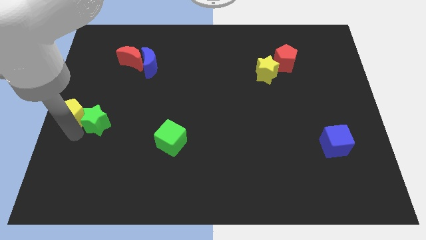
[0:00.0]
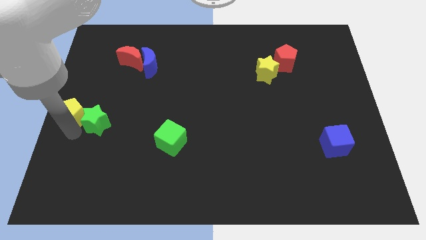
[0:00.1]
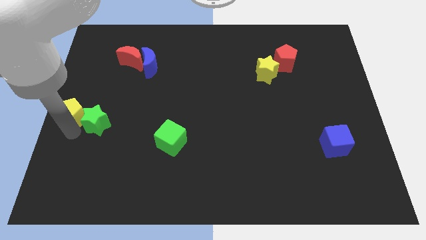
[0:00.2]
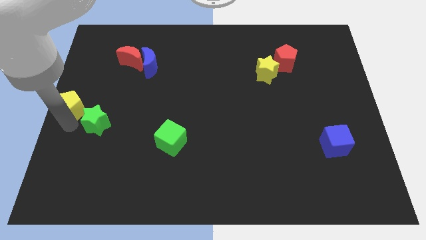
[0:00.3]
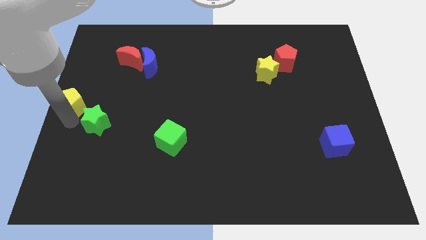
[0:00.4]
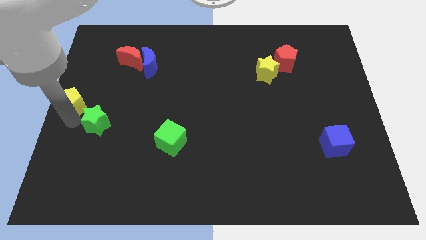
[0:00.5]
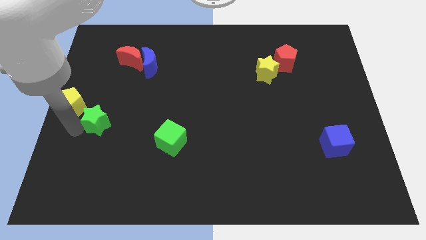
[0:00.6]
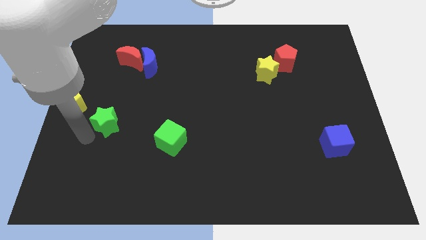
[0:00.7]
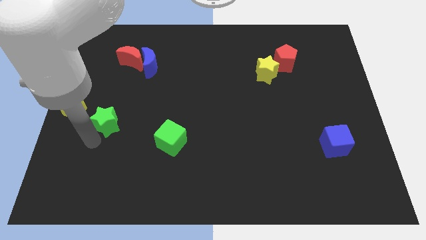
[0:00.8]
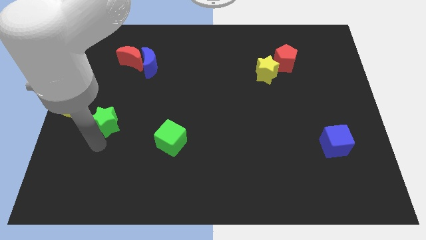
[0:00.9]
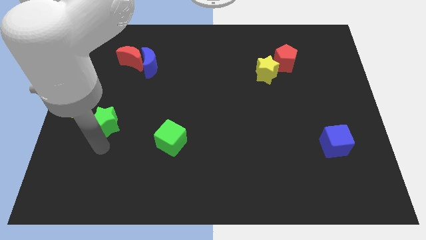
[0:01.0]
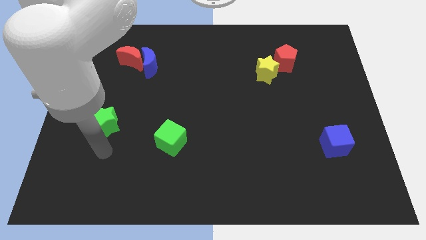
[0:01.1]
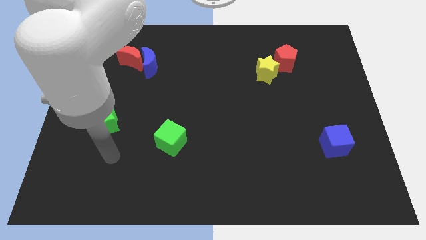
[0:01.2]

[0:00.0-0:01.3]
separate green star from yellow pentagon

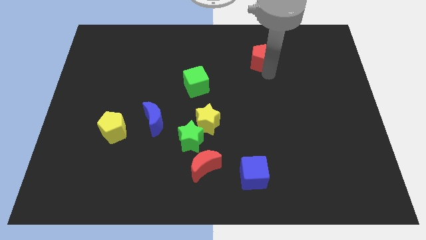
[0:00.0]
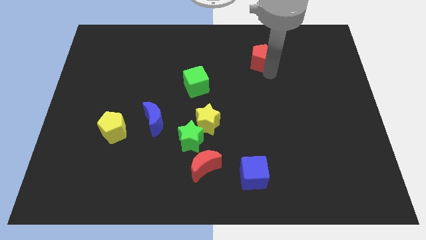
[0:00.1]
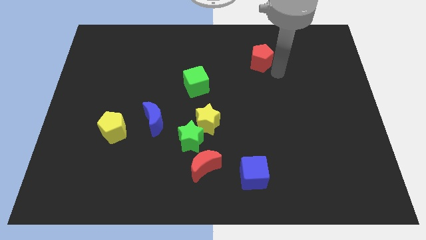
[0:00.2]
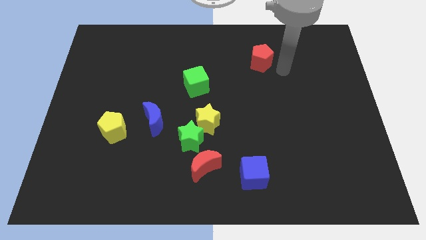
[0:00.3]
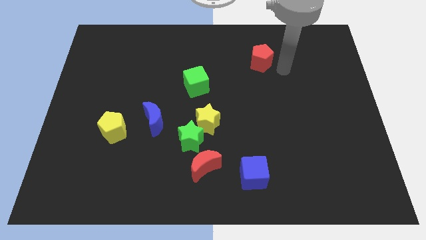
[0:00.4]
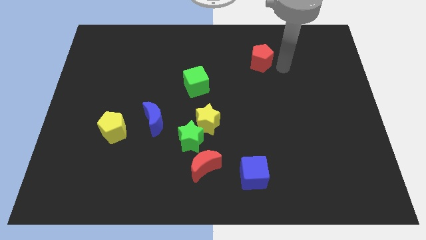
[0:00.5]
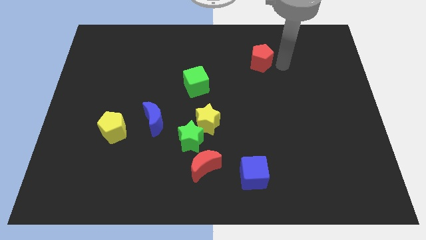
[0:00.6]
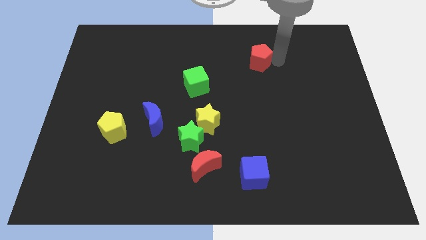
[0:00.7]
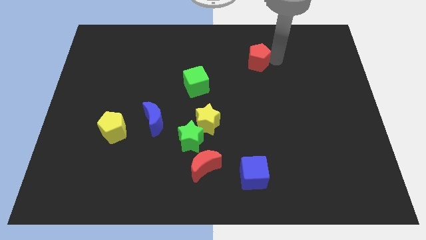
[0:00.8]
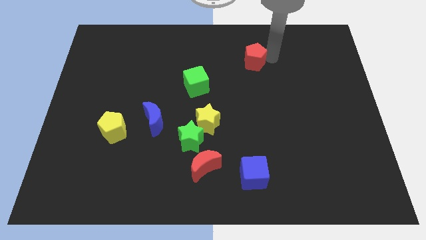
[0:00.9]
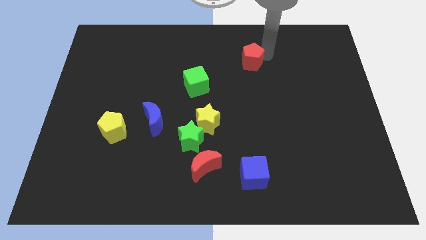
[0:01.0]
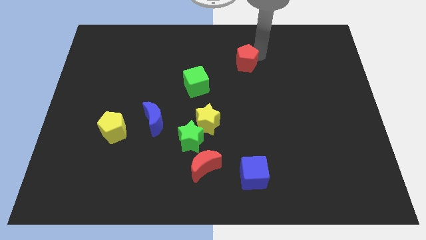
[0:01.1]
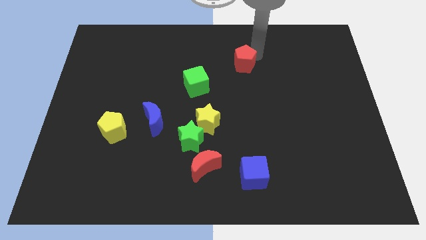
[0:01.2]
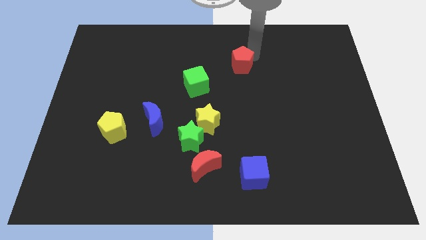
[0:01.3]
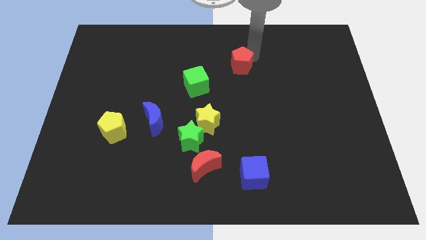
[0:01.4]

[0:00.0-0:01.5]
move the red pentagon slightly to the left

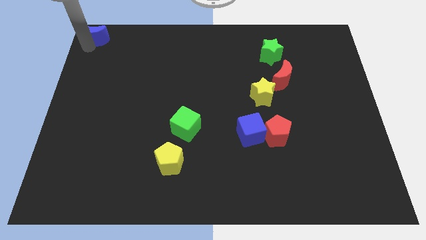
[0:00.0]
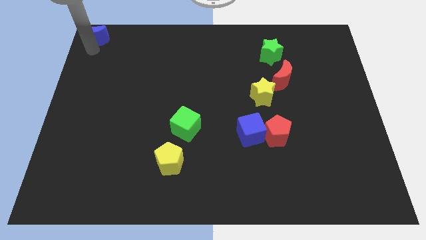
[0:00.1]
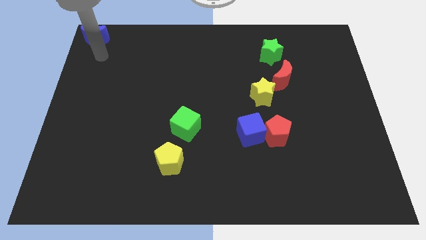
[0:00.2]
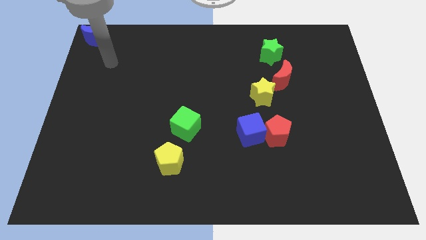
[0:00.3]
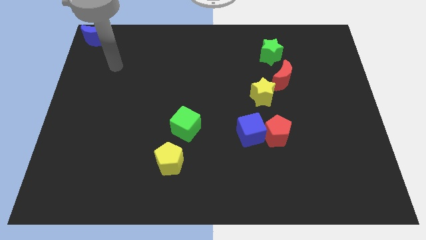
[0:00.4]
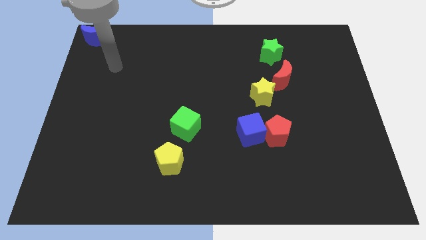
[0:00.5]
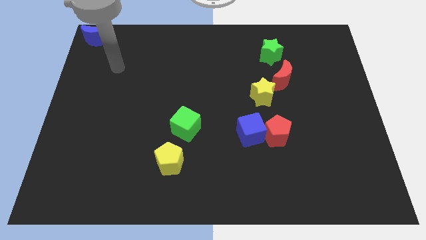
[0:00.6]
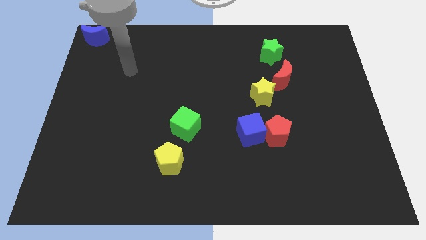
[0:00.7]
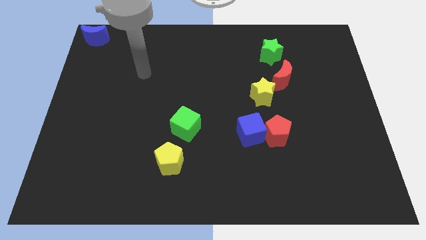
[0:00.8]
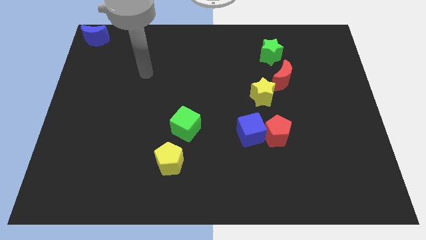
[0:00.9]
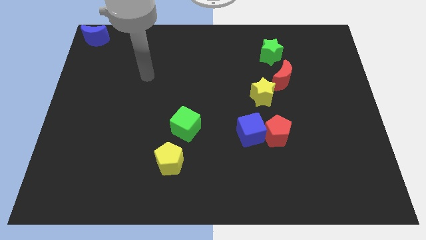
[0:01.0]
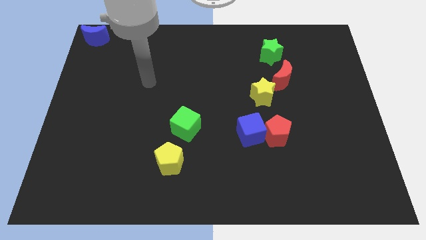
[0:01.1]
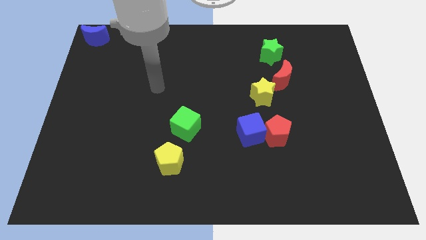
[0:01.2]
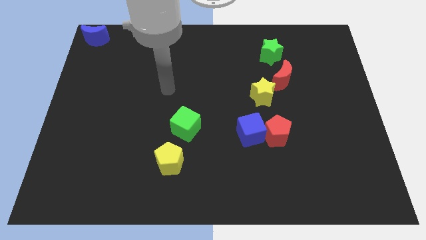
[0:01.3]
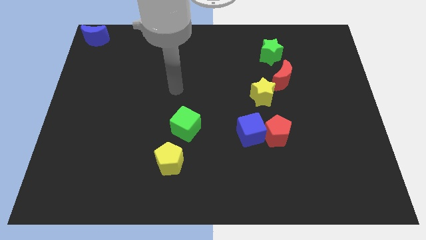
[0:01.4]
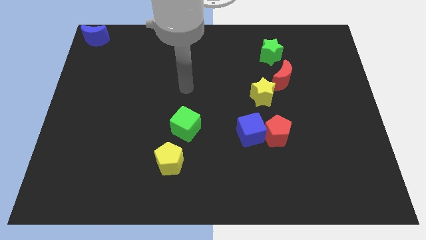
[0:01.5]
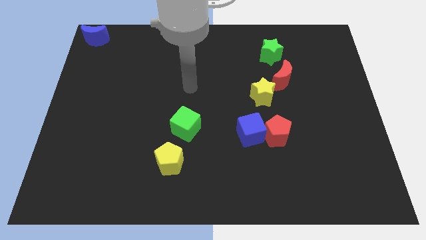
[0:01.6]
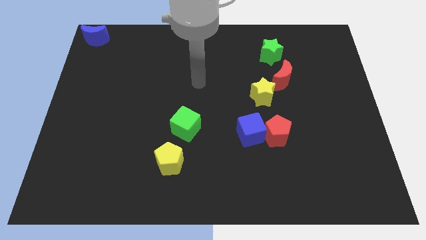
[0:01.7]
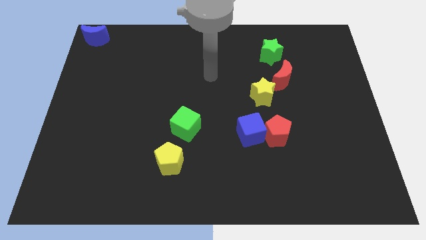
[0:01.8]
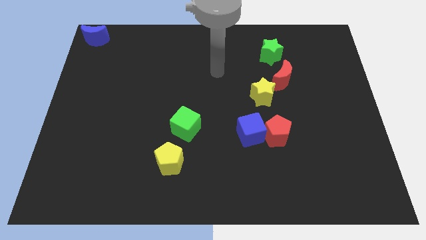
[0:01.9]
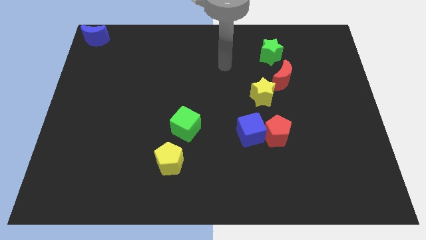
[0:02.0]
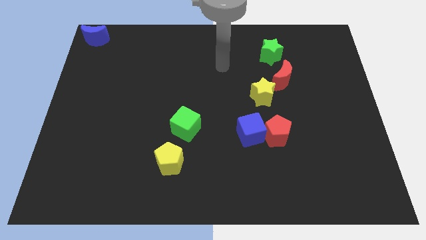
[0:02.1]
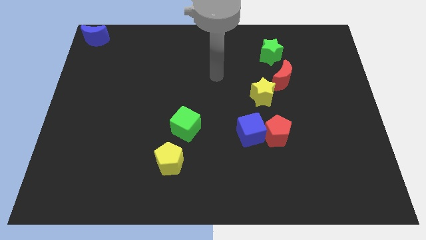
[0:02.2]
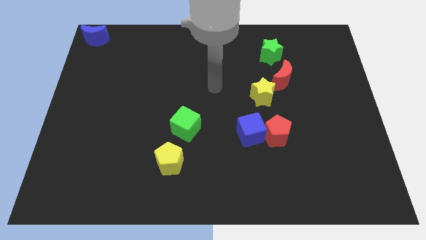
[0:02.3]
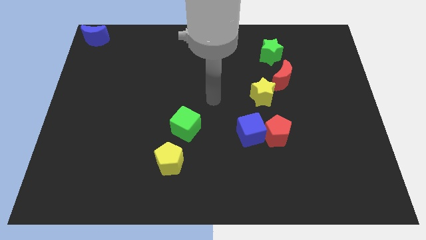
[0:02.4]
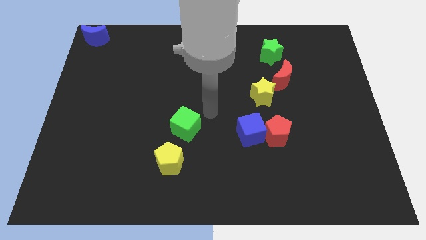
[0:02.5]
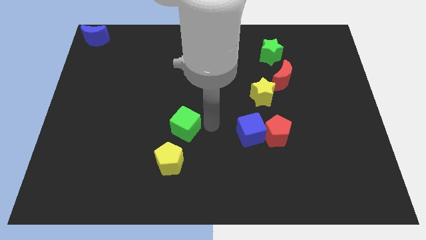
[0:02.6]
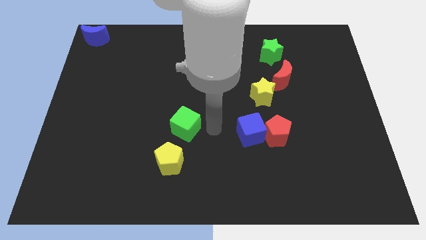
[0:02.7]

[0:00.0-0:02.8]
point your arm at the right of the green cube

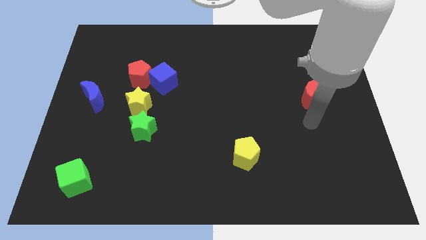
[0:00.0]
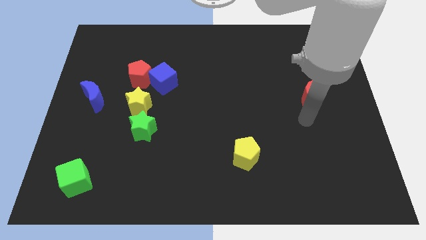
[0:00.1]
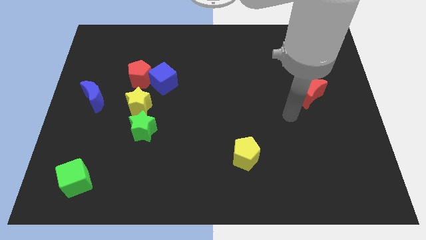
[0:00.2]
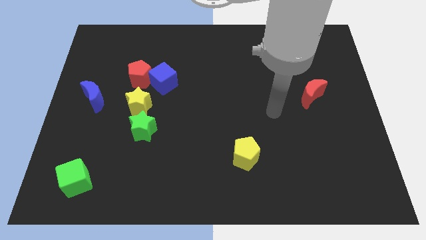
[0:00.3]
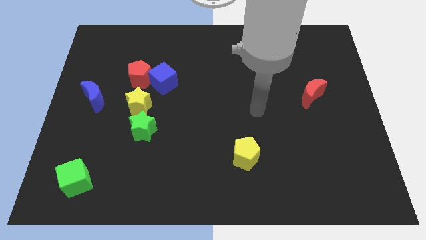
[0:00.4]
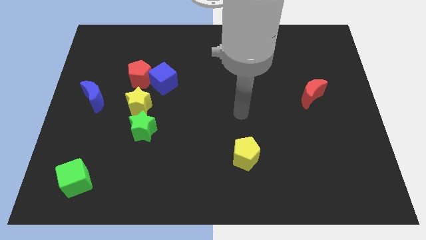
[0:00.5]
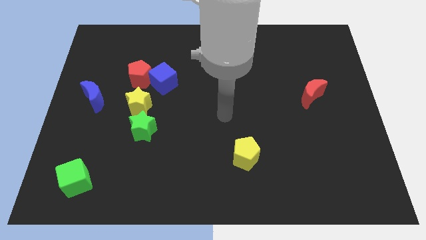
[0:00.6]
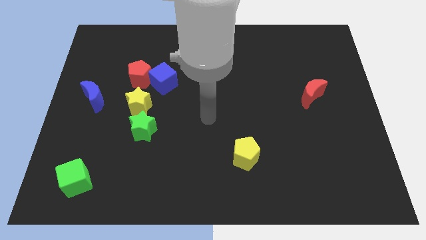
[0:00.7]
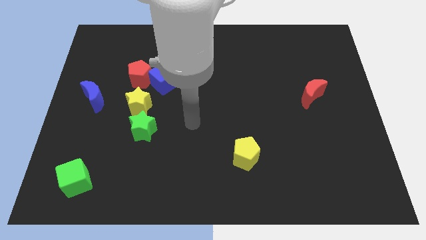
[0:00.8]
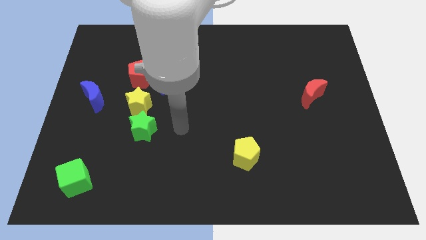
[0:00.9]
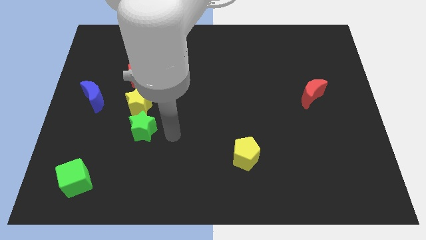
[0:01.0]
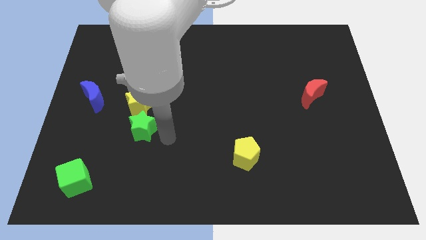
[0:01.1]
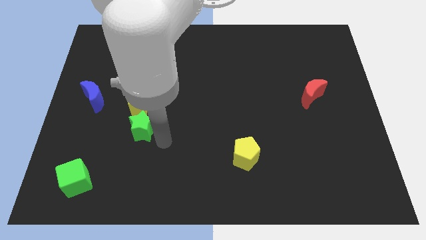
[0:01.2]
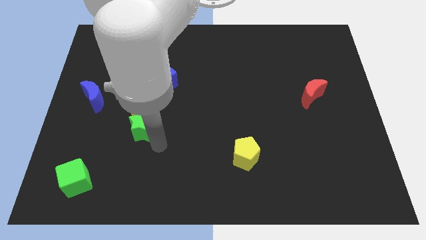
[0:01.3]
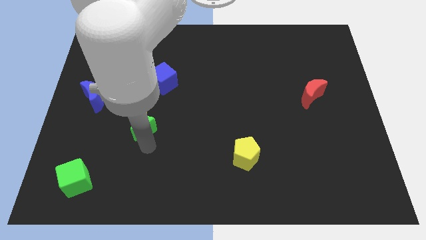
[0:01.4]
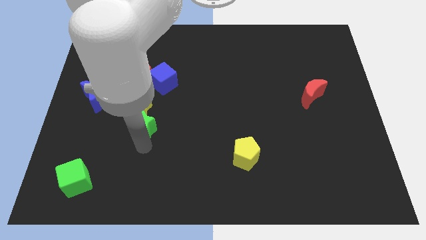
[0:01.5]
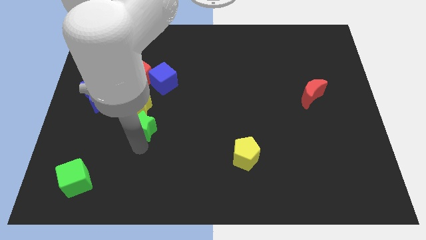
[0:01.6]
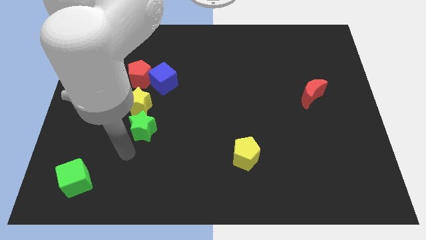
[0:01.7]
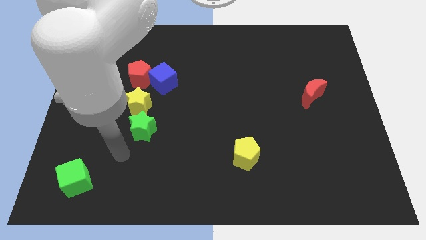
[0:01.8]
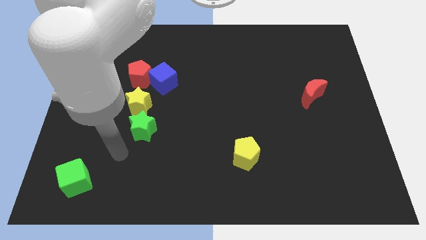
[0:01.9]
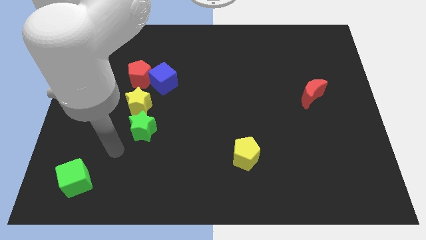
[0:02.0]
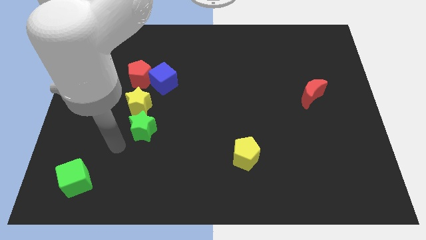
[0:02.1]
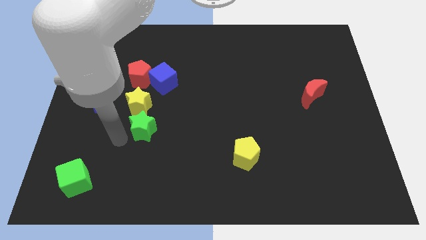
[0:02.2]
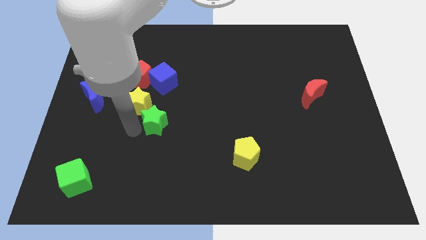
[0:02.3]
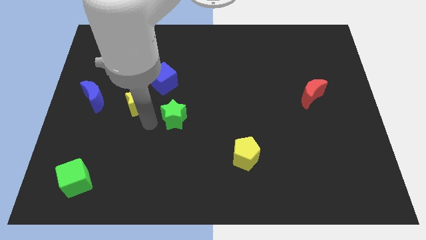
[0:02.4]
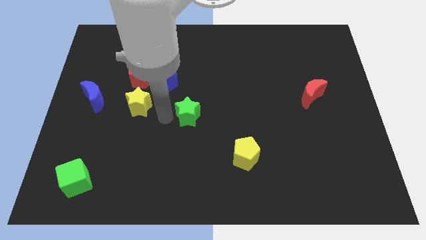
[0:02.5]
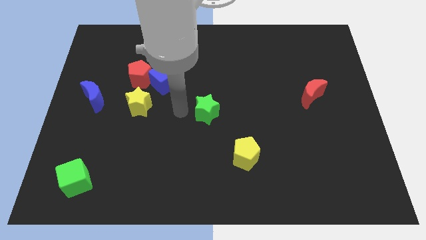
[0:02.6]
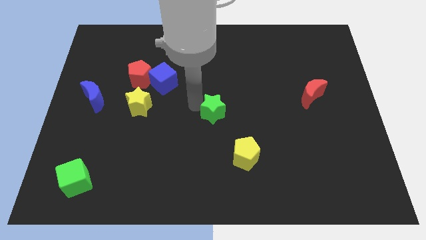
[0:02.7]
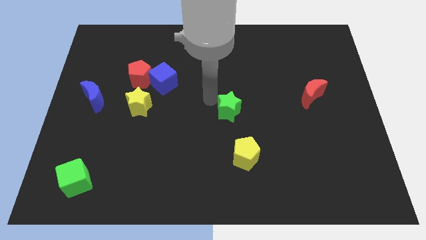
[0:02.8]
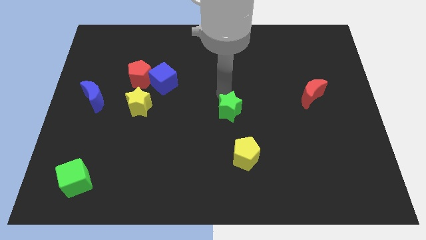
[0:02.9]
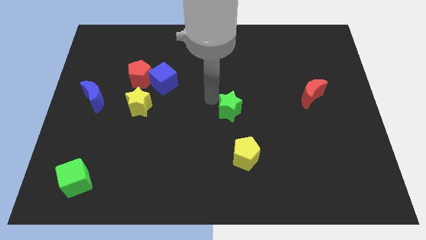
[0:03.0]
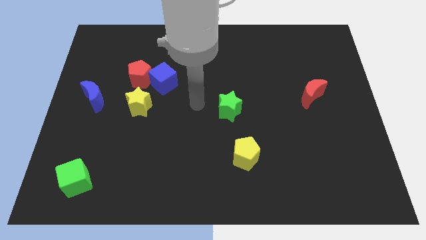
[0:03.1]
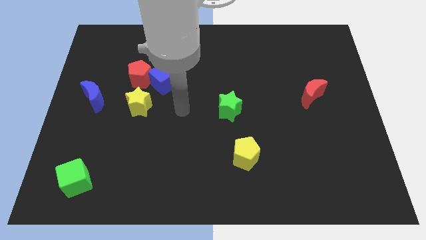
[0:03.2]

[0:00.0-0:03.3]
move the green star to the horizontal right side of the yellow star
